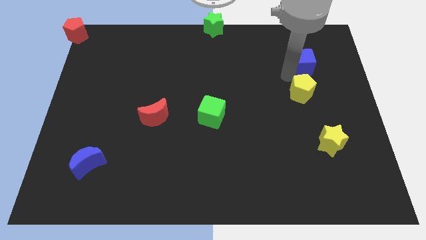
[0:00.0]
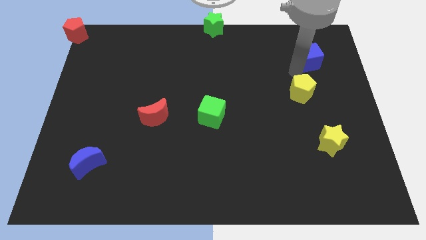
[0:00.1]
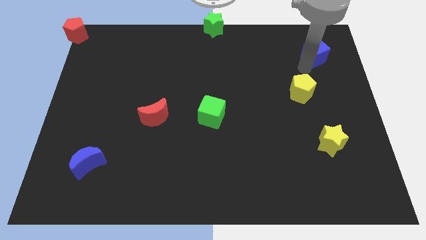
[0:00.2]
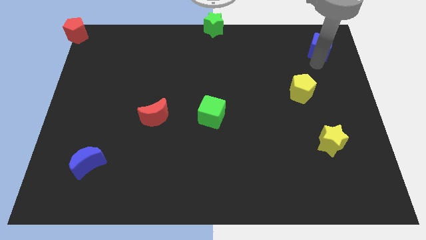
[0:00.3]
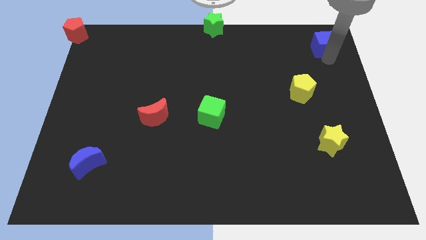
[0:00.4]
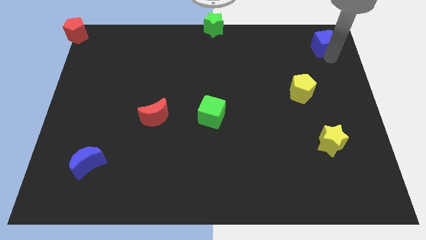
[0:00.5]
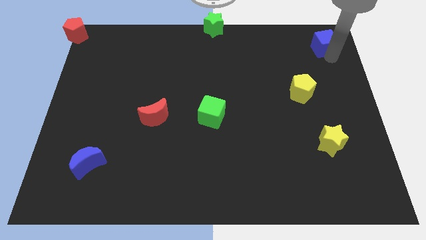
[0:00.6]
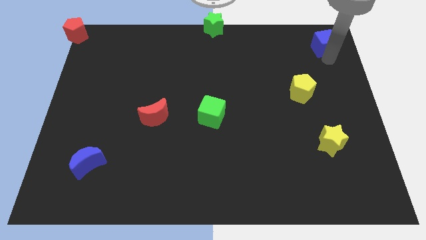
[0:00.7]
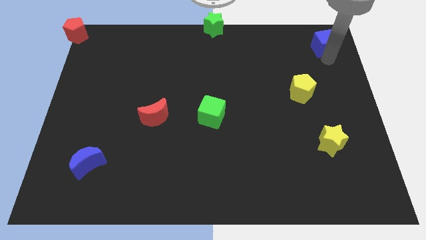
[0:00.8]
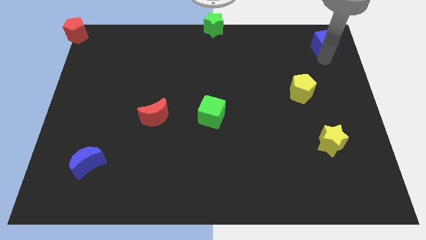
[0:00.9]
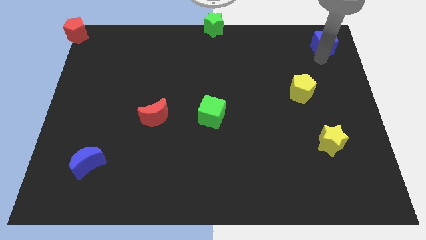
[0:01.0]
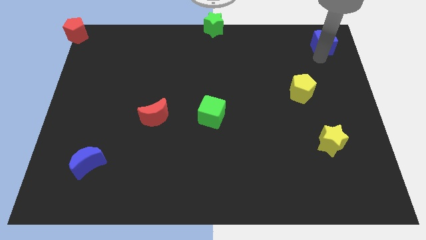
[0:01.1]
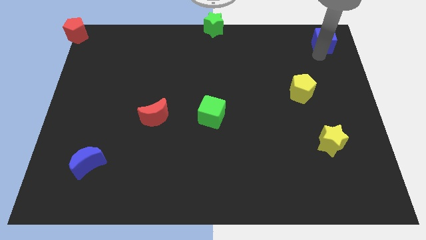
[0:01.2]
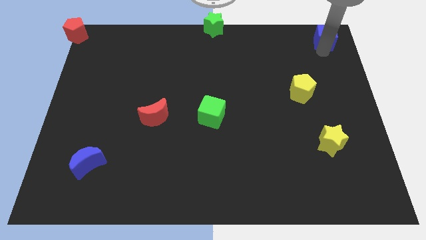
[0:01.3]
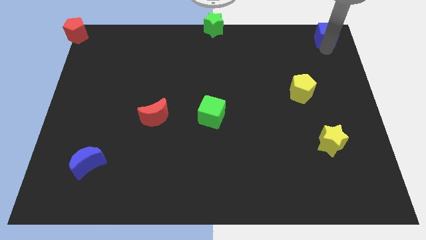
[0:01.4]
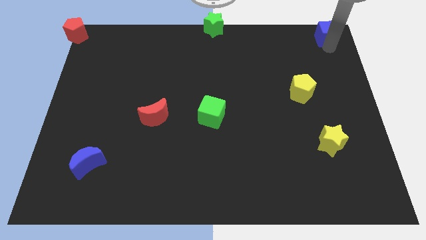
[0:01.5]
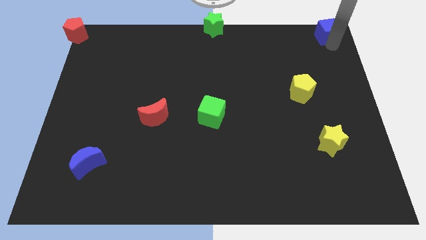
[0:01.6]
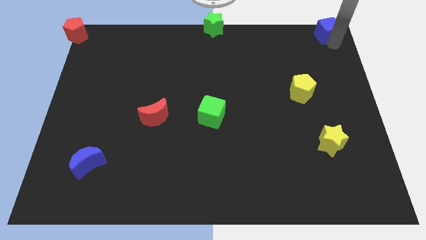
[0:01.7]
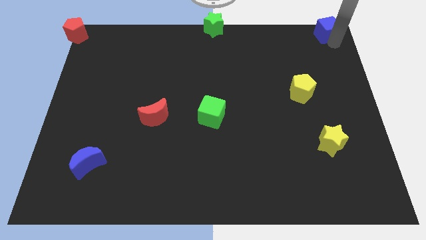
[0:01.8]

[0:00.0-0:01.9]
push the blue cube to the top right corner of the board

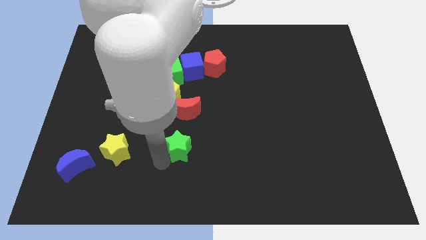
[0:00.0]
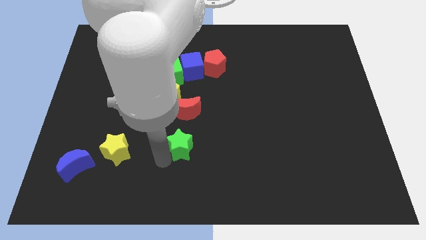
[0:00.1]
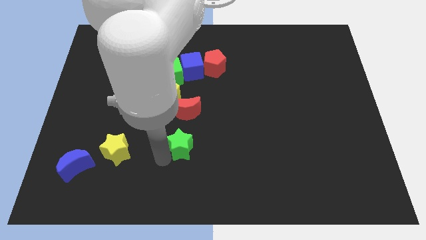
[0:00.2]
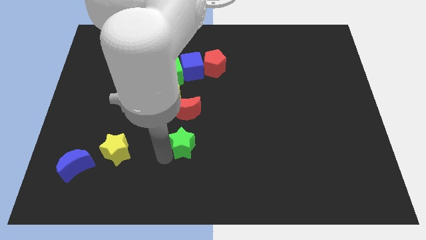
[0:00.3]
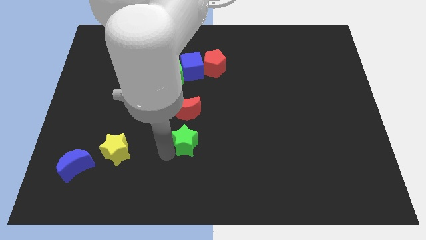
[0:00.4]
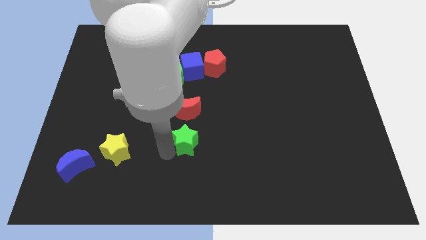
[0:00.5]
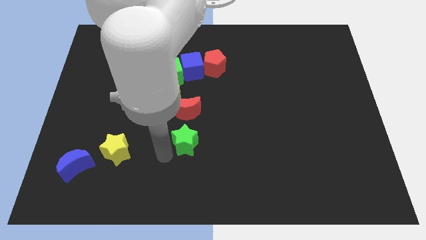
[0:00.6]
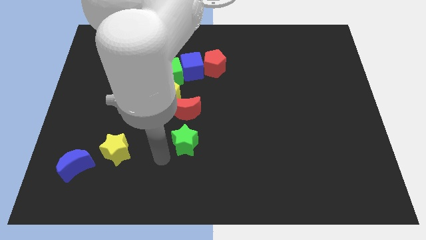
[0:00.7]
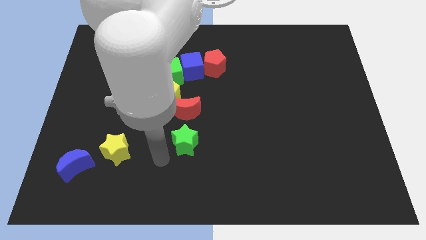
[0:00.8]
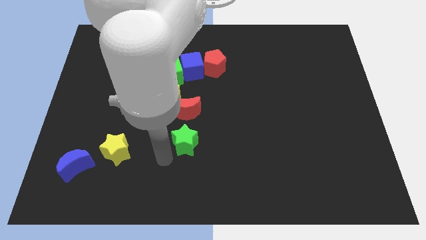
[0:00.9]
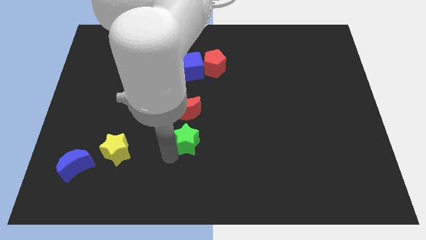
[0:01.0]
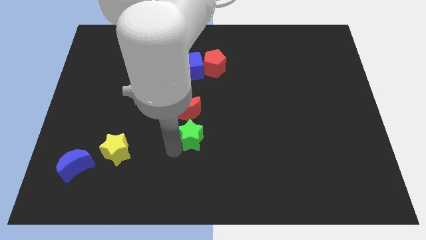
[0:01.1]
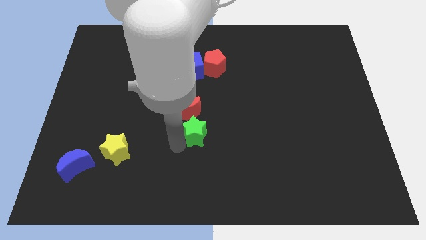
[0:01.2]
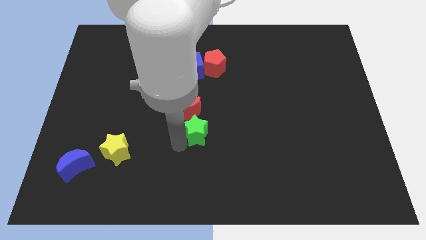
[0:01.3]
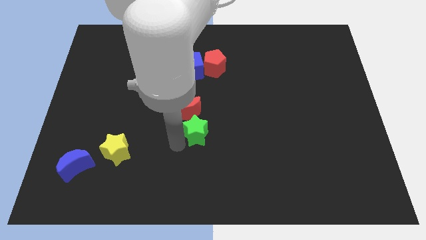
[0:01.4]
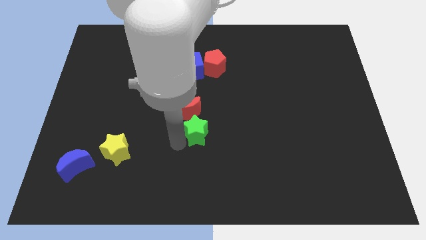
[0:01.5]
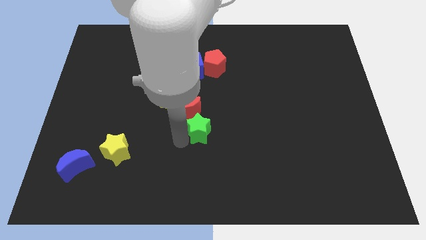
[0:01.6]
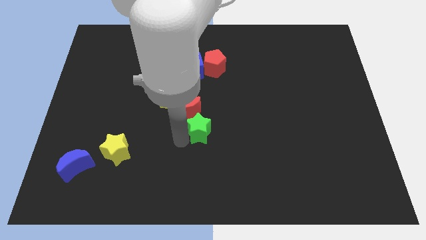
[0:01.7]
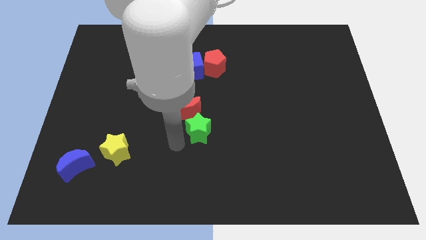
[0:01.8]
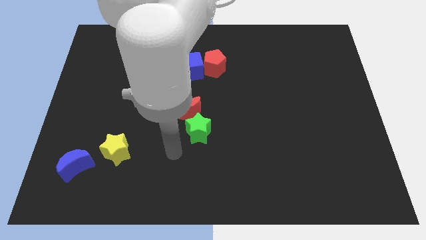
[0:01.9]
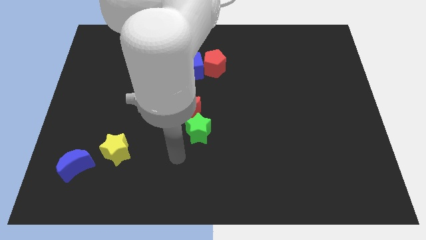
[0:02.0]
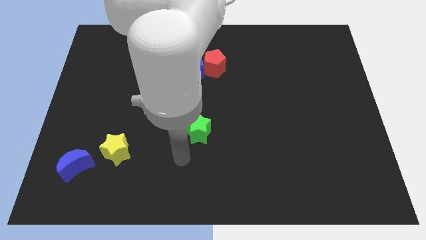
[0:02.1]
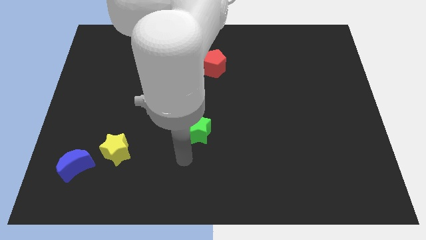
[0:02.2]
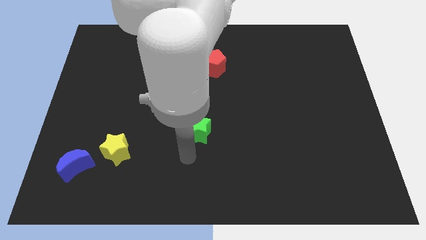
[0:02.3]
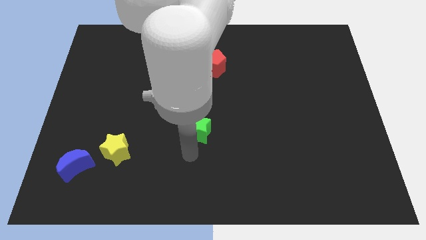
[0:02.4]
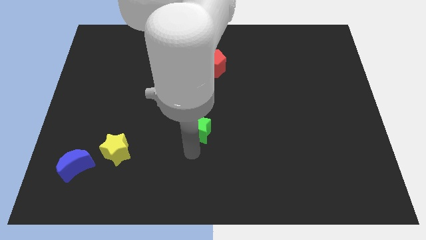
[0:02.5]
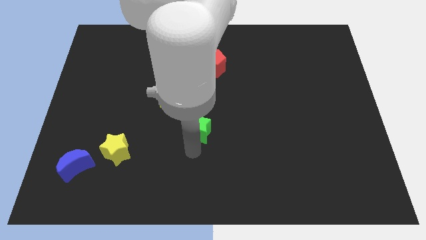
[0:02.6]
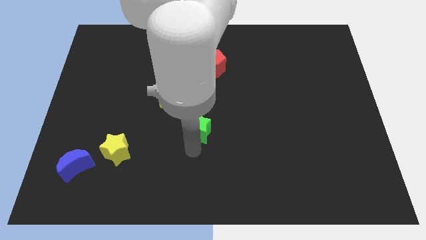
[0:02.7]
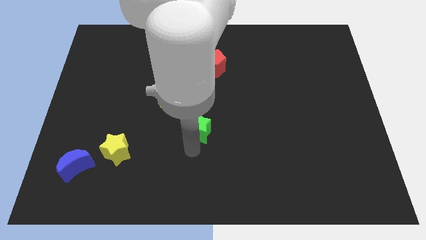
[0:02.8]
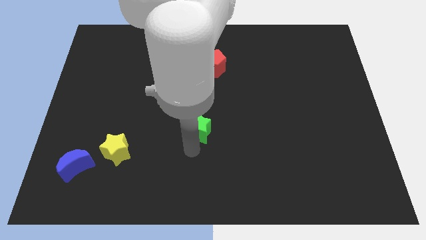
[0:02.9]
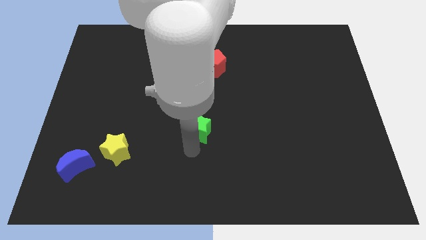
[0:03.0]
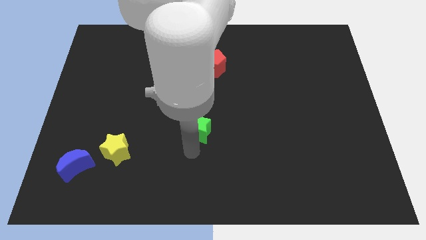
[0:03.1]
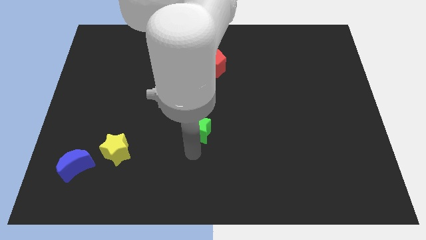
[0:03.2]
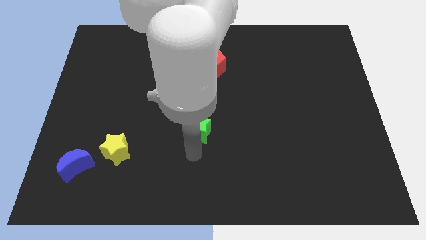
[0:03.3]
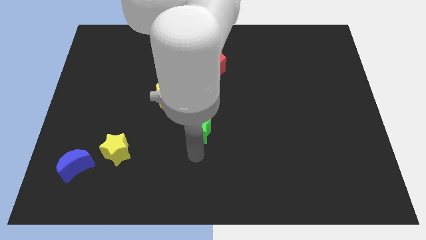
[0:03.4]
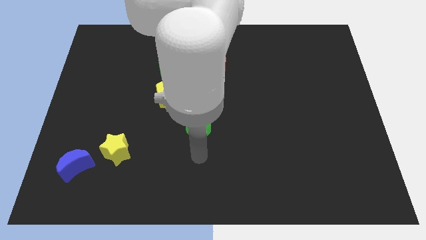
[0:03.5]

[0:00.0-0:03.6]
move the green star into the red moon

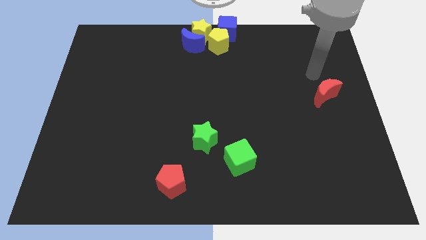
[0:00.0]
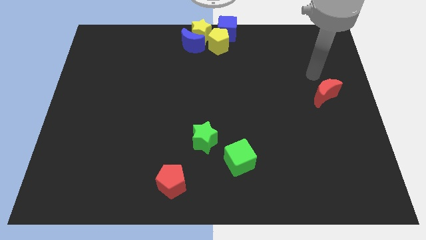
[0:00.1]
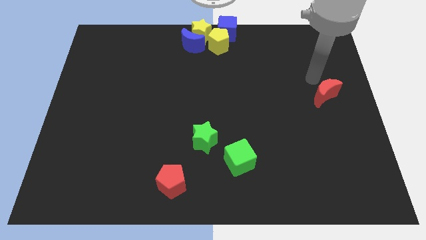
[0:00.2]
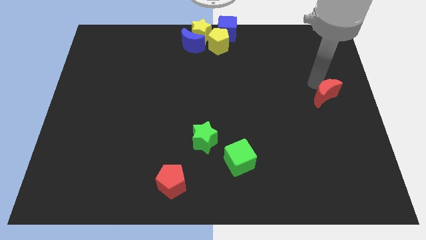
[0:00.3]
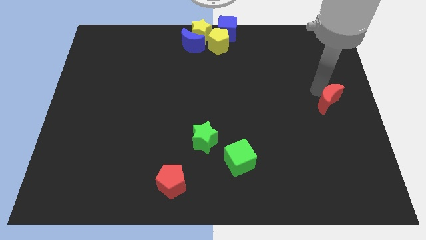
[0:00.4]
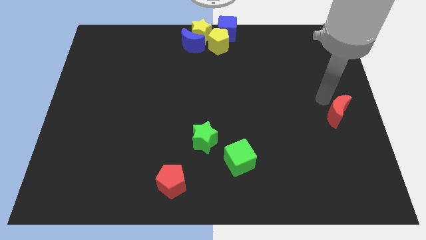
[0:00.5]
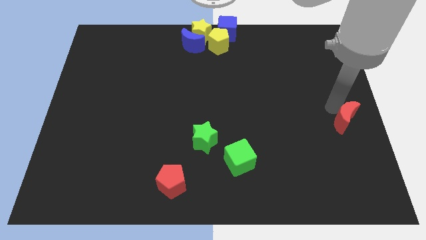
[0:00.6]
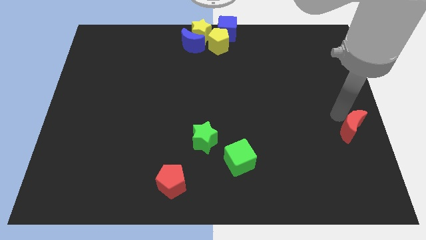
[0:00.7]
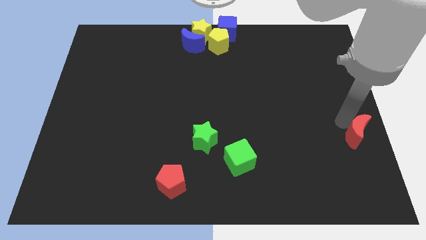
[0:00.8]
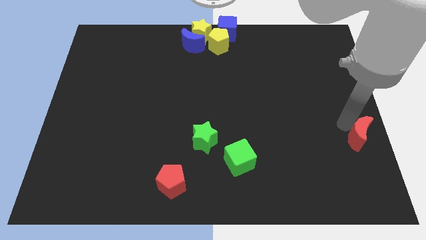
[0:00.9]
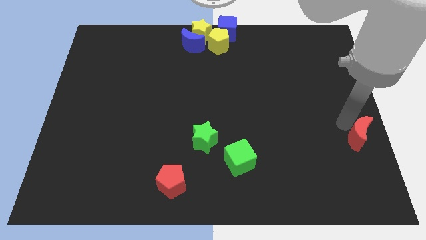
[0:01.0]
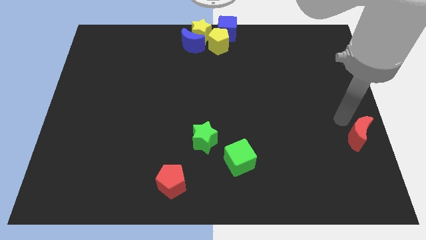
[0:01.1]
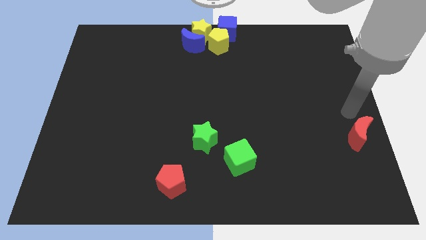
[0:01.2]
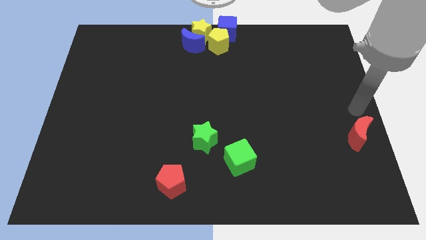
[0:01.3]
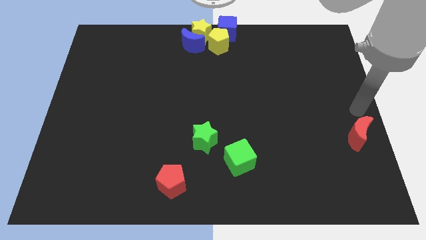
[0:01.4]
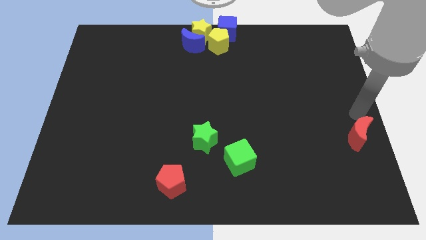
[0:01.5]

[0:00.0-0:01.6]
place the red crescent to the right of the green star

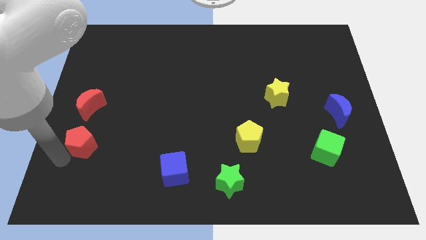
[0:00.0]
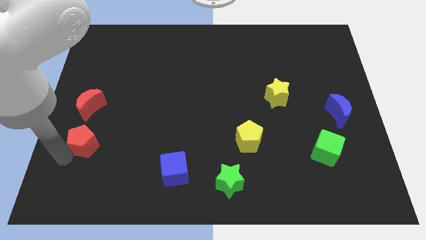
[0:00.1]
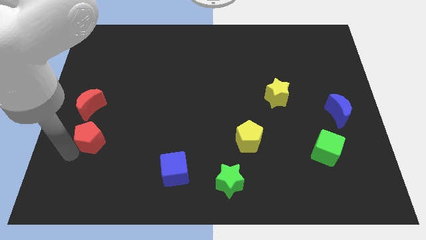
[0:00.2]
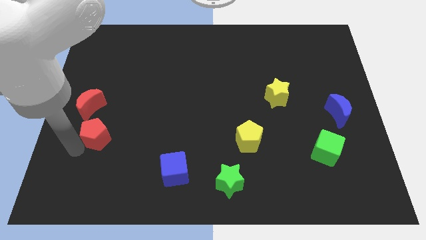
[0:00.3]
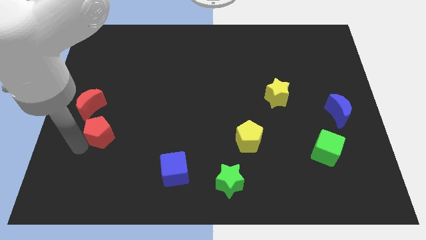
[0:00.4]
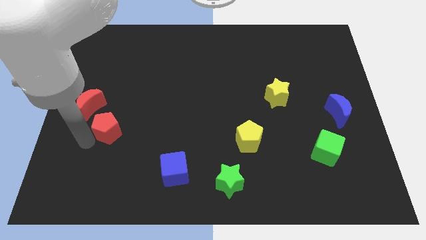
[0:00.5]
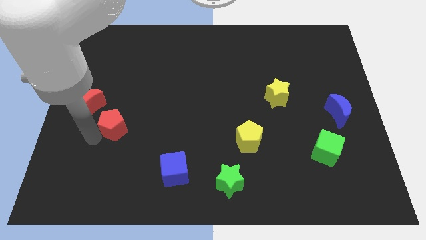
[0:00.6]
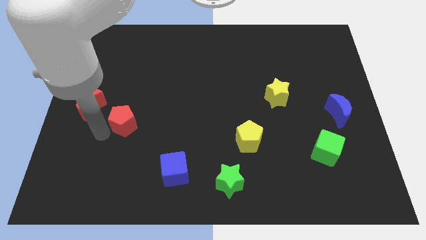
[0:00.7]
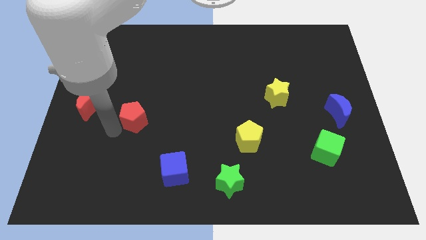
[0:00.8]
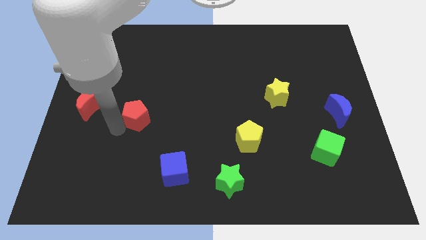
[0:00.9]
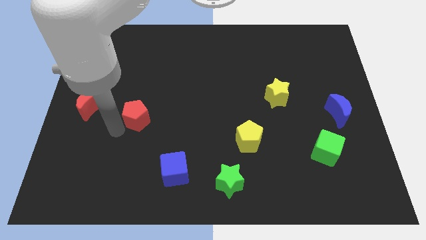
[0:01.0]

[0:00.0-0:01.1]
push the red pentagon right to red moon

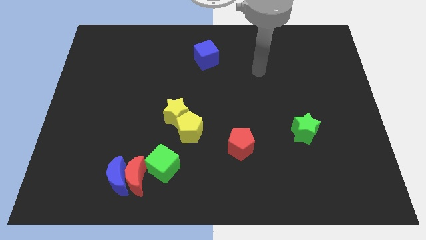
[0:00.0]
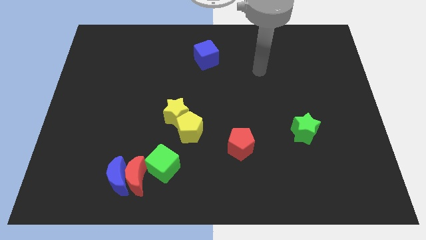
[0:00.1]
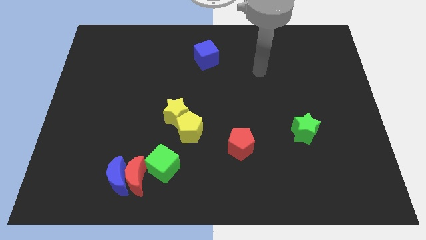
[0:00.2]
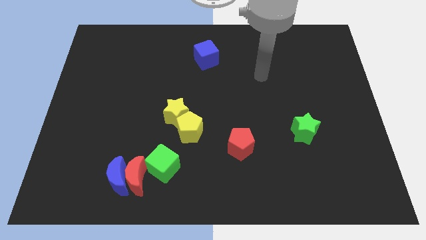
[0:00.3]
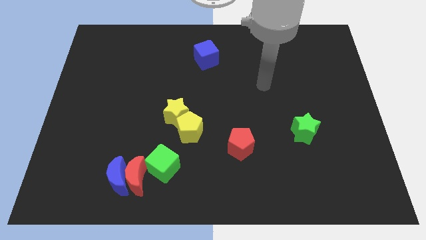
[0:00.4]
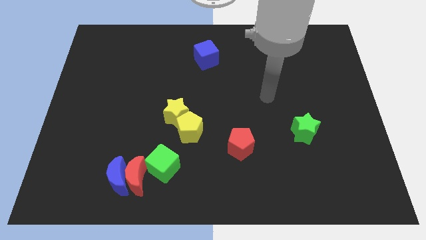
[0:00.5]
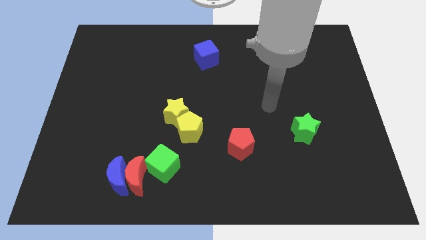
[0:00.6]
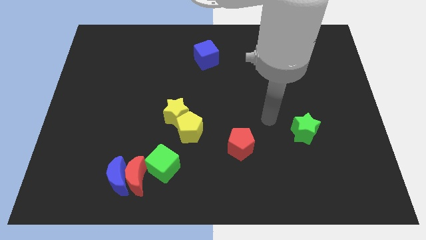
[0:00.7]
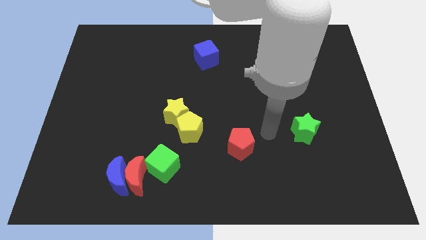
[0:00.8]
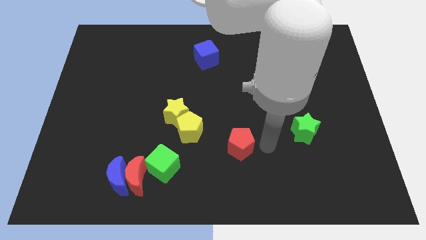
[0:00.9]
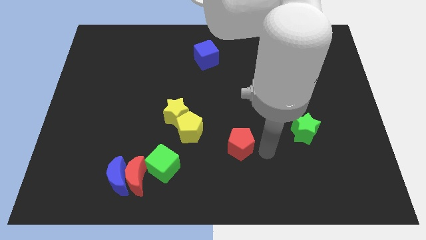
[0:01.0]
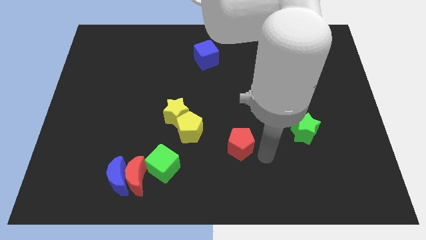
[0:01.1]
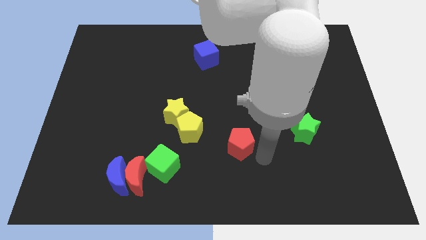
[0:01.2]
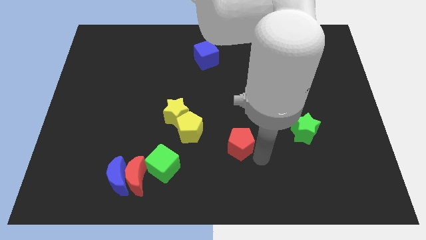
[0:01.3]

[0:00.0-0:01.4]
move your arm towards the red pentagon
